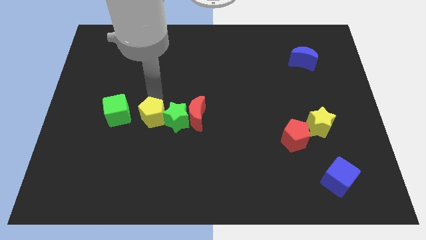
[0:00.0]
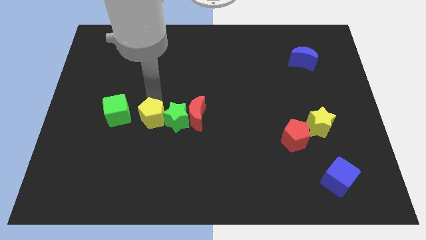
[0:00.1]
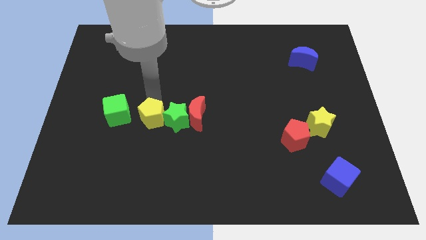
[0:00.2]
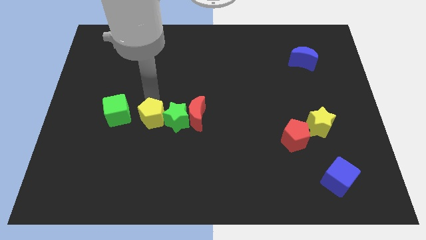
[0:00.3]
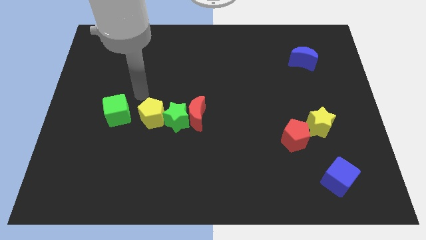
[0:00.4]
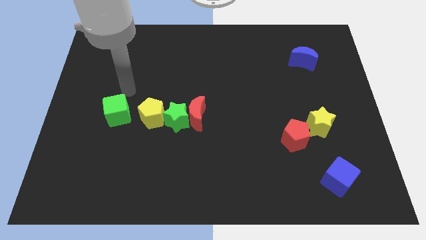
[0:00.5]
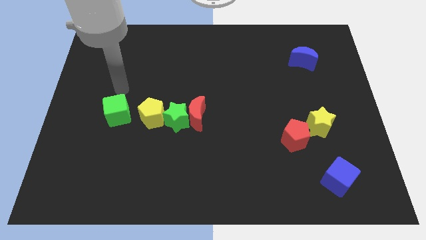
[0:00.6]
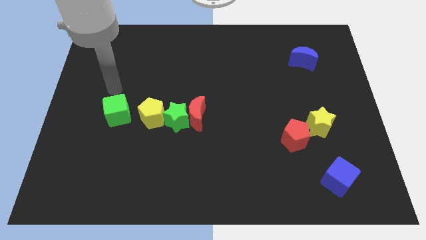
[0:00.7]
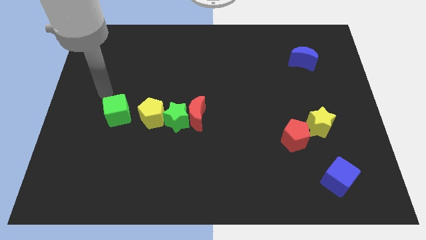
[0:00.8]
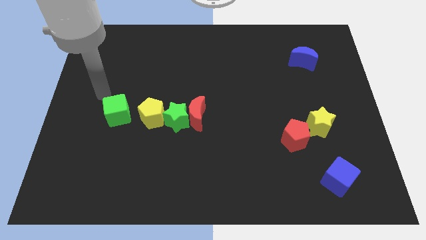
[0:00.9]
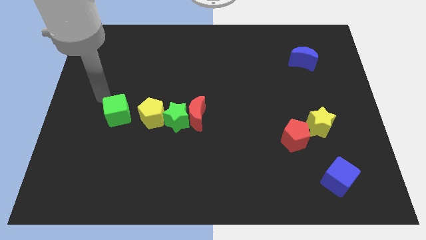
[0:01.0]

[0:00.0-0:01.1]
place the arm towards the green cube

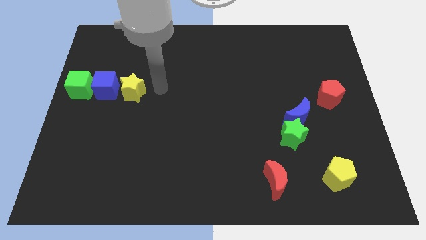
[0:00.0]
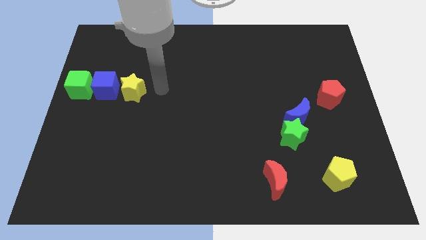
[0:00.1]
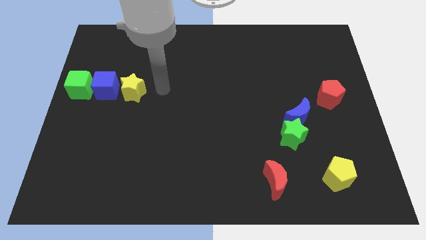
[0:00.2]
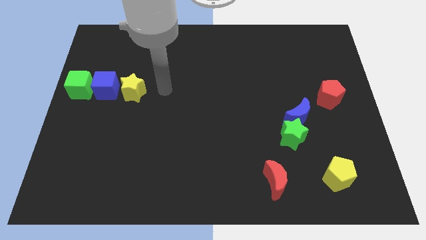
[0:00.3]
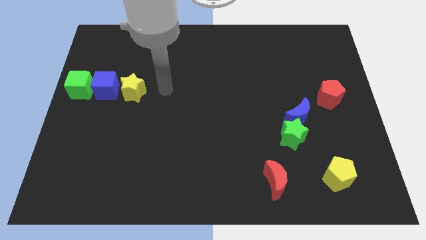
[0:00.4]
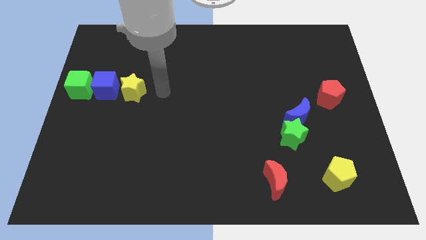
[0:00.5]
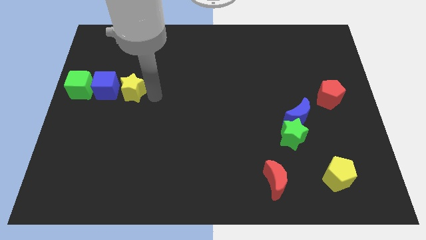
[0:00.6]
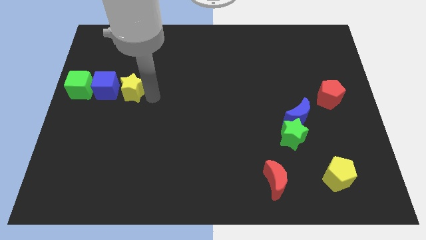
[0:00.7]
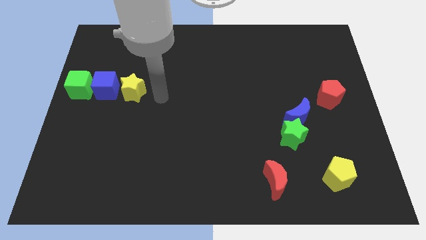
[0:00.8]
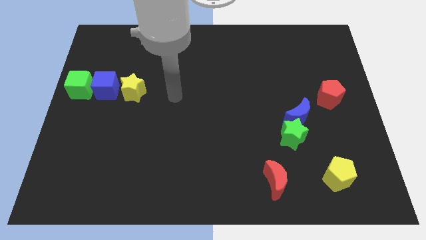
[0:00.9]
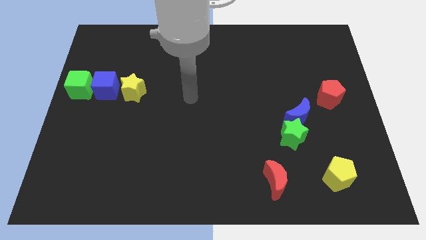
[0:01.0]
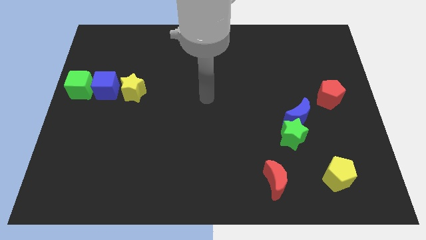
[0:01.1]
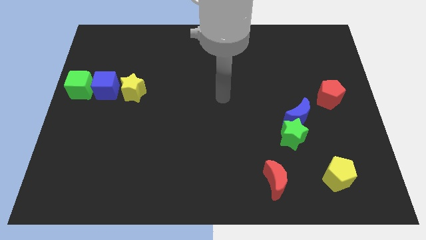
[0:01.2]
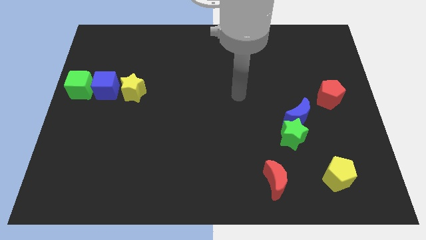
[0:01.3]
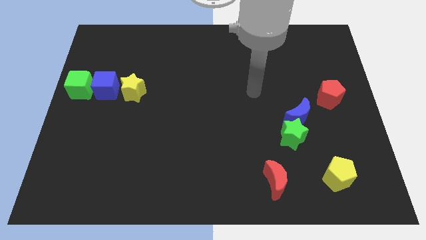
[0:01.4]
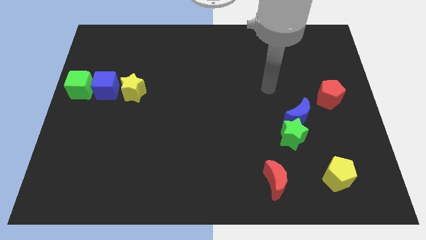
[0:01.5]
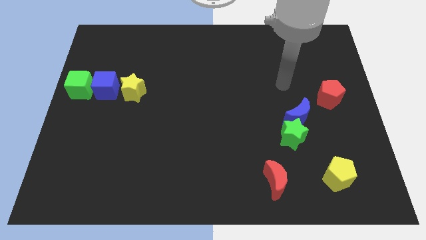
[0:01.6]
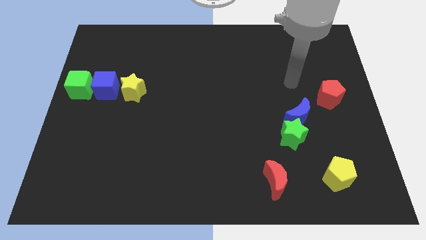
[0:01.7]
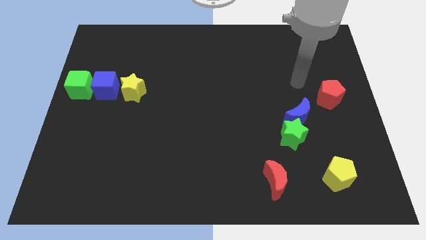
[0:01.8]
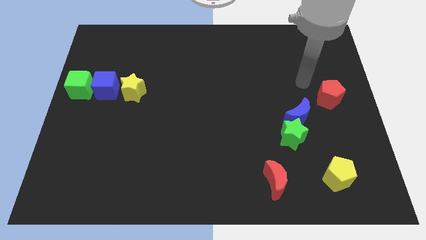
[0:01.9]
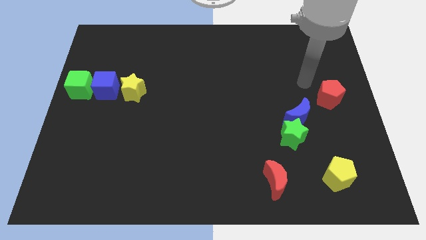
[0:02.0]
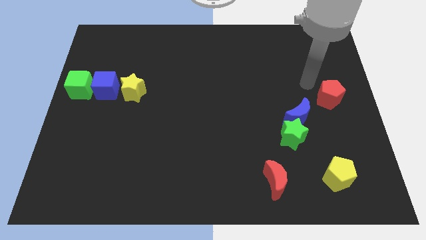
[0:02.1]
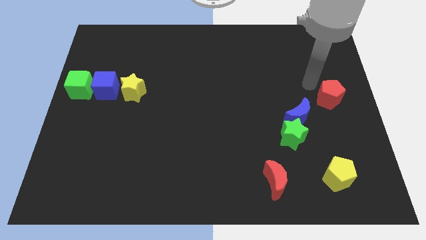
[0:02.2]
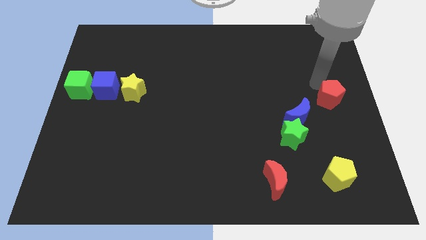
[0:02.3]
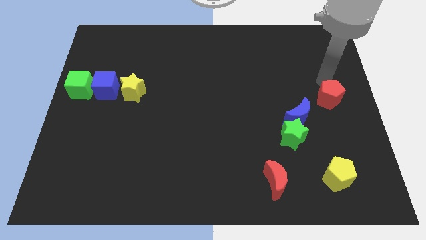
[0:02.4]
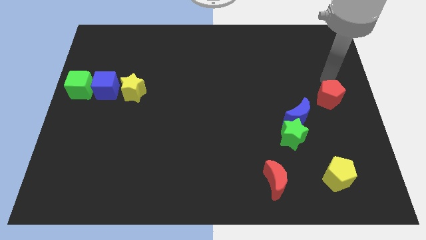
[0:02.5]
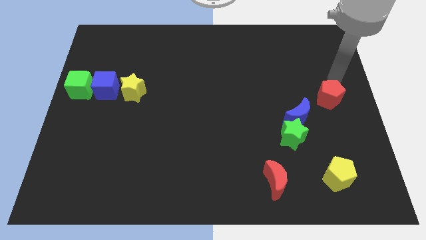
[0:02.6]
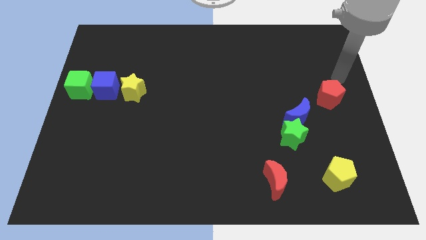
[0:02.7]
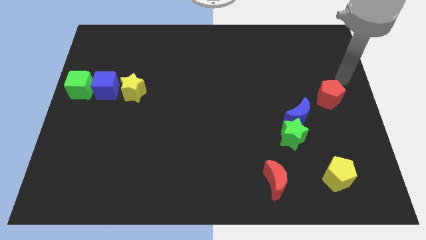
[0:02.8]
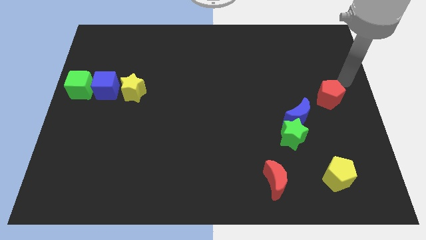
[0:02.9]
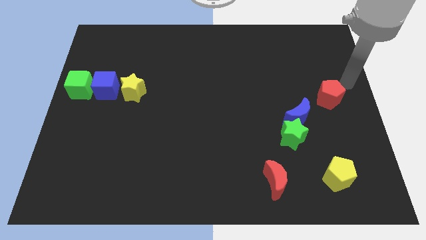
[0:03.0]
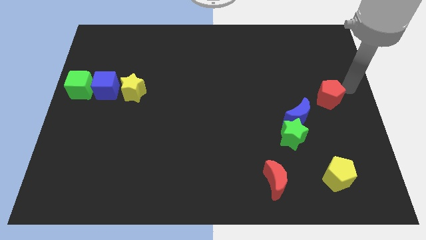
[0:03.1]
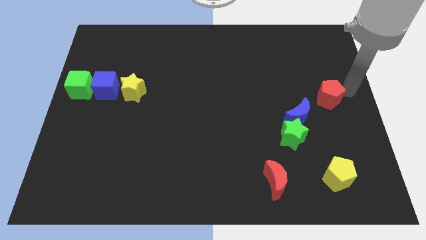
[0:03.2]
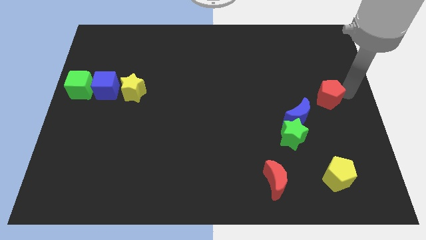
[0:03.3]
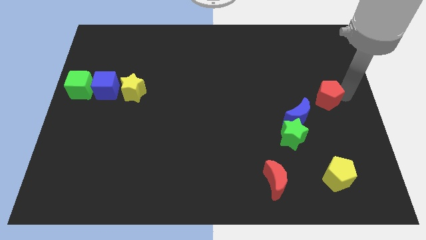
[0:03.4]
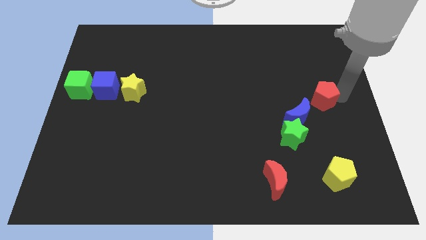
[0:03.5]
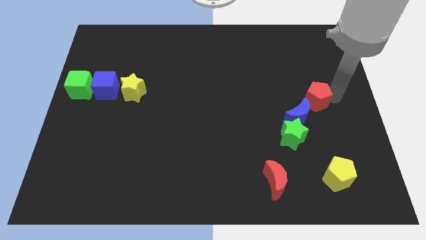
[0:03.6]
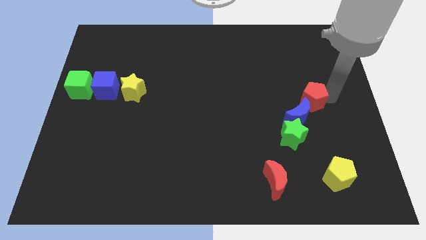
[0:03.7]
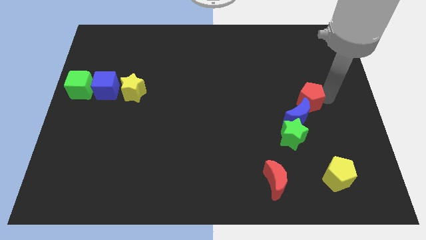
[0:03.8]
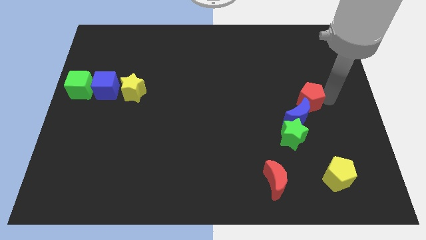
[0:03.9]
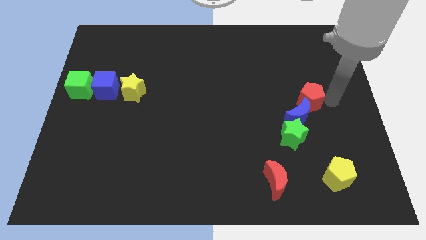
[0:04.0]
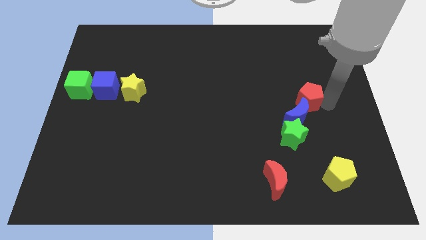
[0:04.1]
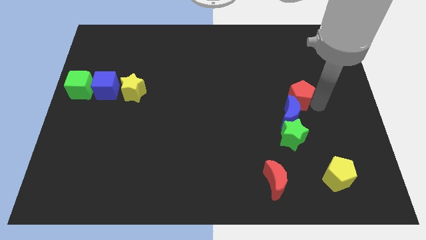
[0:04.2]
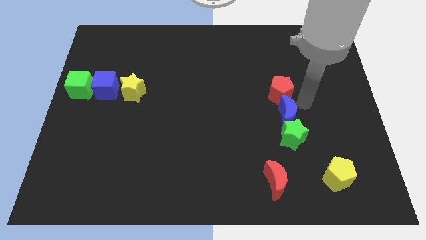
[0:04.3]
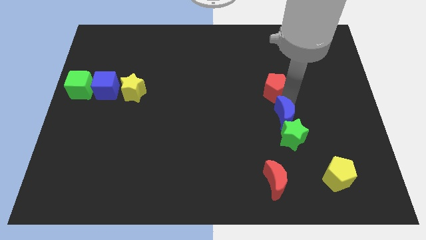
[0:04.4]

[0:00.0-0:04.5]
place the red pentagon vertically above the blue moon

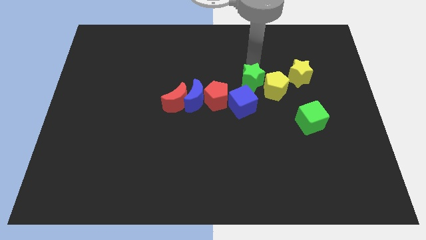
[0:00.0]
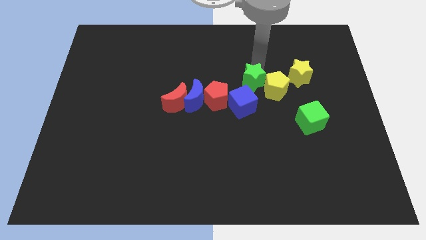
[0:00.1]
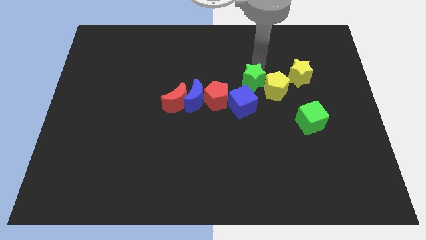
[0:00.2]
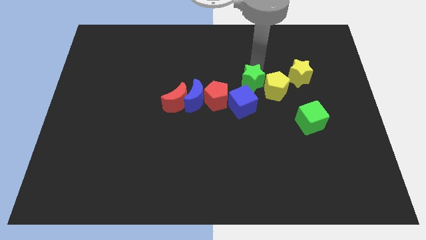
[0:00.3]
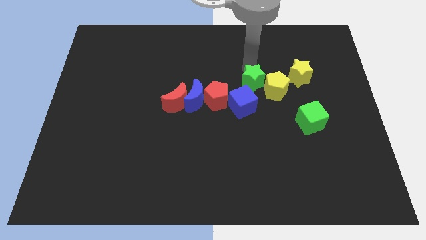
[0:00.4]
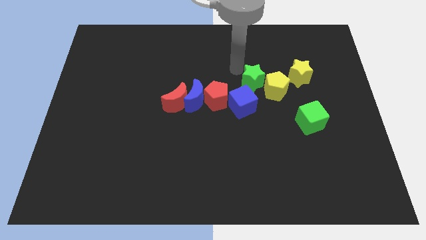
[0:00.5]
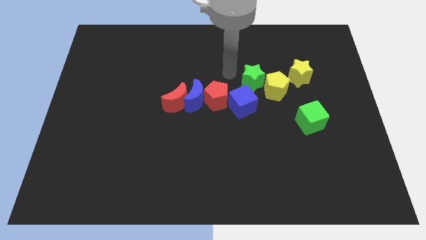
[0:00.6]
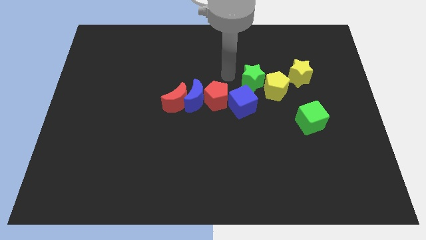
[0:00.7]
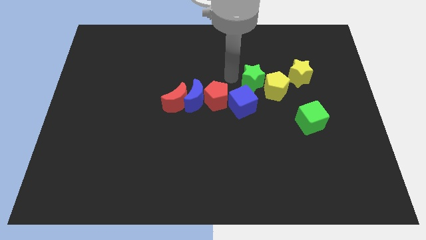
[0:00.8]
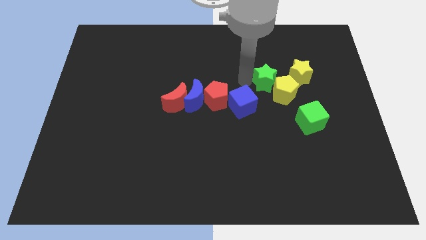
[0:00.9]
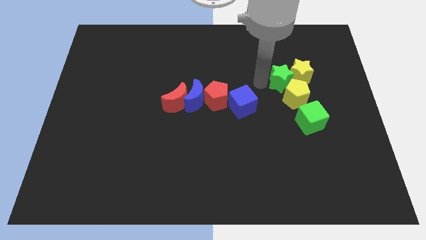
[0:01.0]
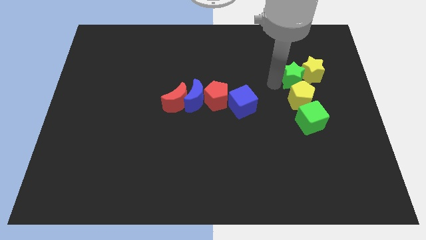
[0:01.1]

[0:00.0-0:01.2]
move the green star to the left of the yellow star

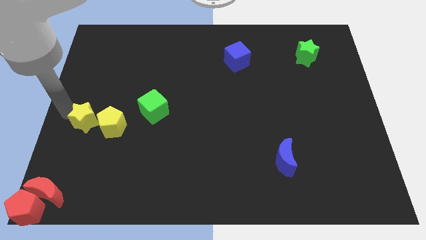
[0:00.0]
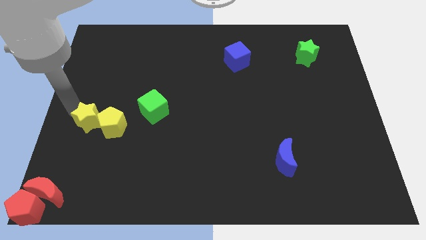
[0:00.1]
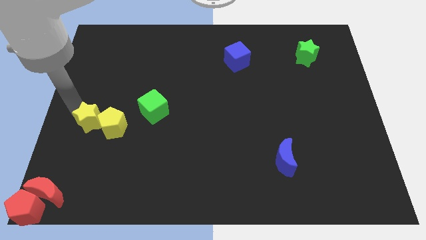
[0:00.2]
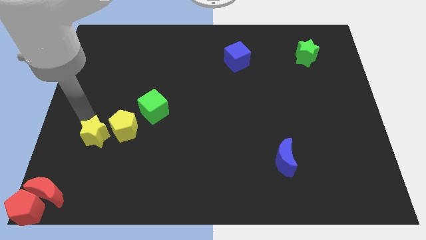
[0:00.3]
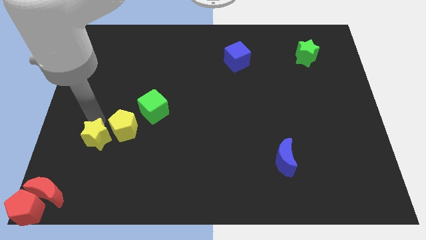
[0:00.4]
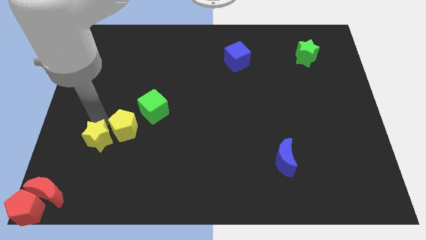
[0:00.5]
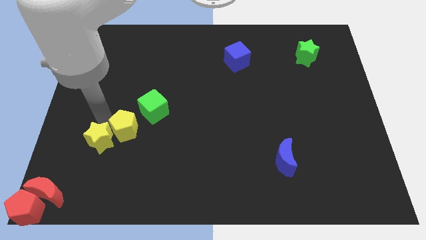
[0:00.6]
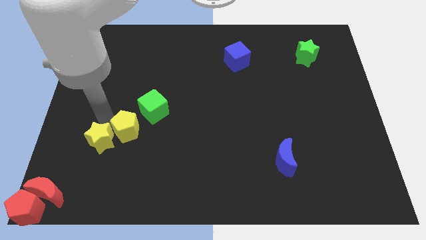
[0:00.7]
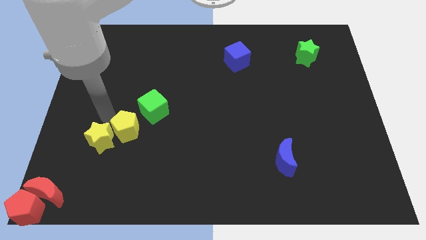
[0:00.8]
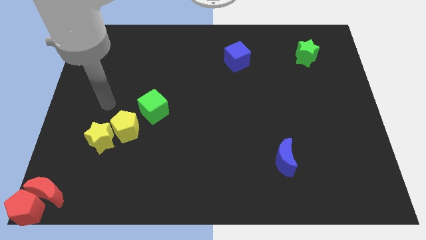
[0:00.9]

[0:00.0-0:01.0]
adjust the yellow blocks to form a line

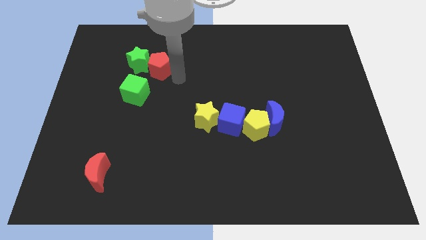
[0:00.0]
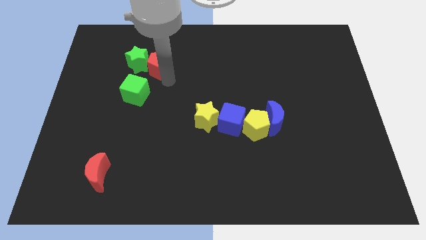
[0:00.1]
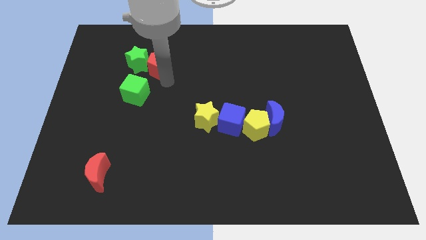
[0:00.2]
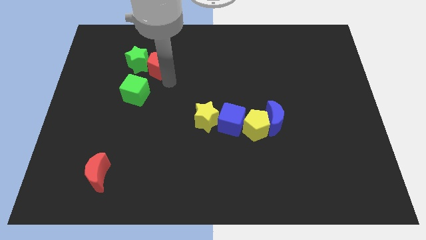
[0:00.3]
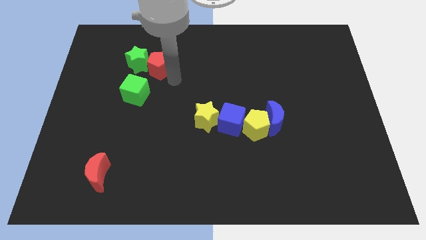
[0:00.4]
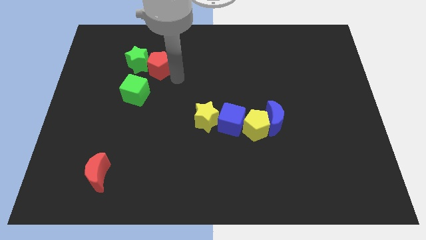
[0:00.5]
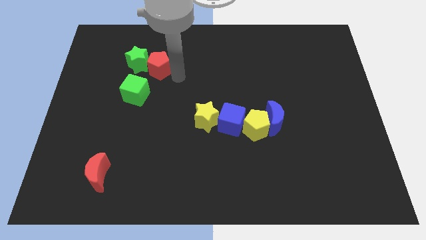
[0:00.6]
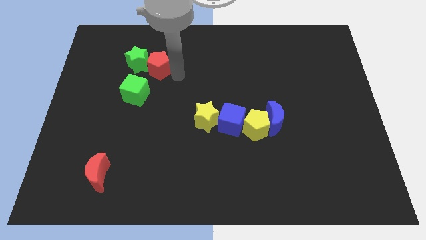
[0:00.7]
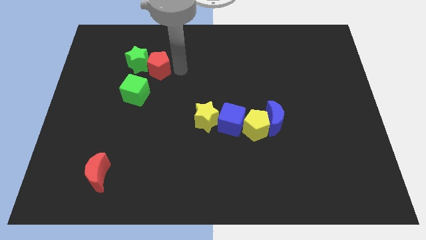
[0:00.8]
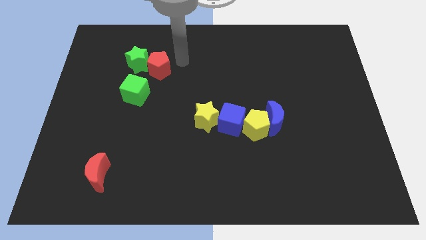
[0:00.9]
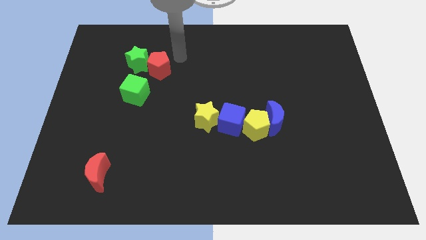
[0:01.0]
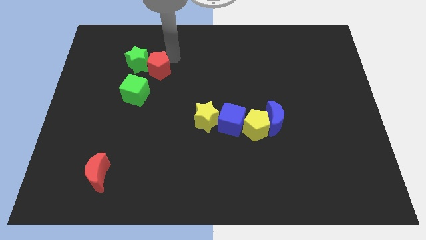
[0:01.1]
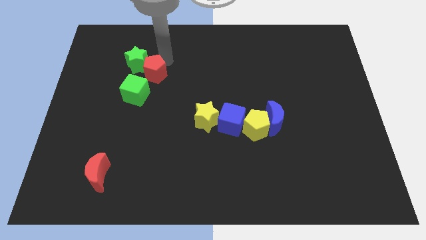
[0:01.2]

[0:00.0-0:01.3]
put your arm above the red pentagon

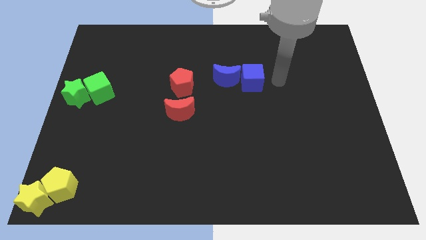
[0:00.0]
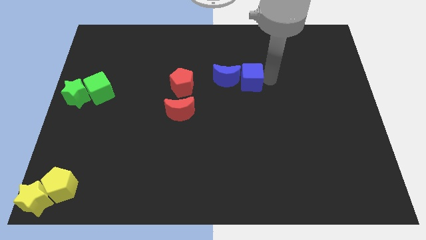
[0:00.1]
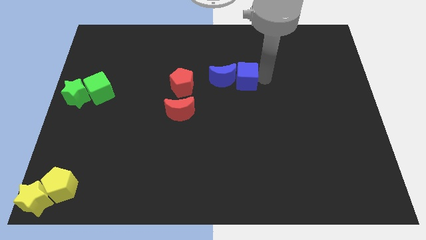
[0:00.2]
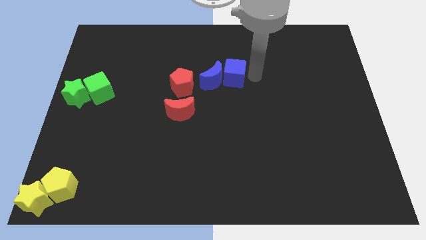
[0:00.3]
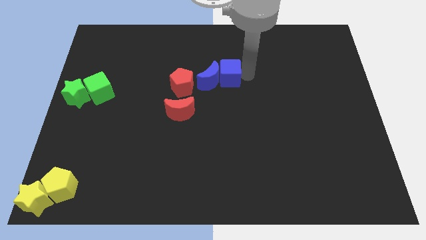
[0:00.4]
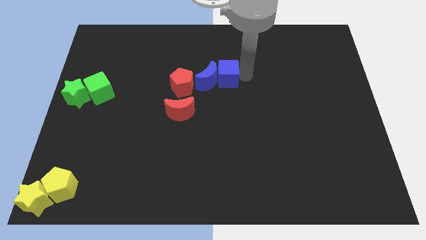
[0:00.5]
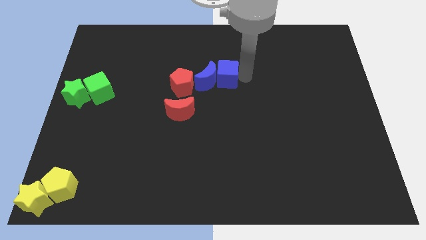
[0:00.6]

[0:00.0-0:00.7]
push the blue blocks towards the red pentagon